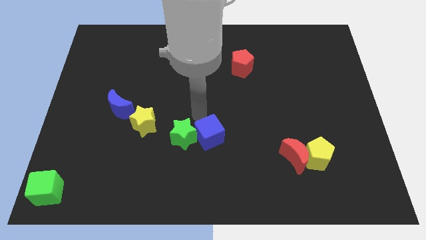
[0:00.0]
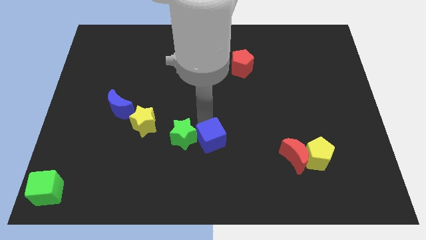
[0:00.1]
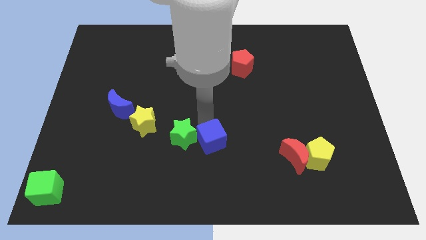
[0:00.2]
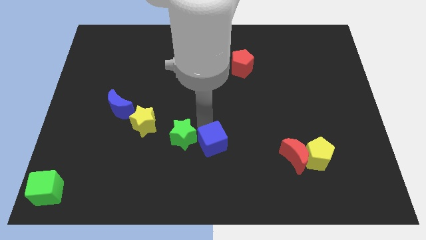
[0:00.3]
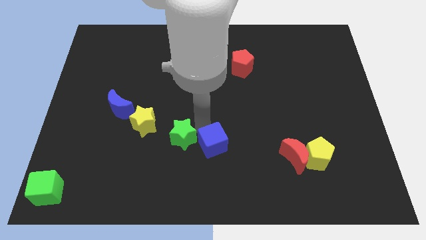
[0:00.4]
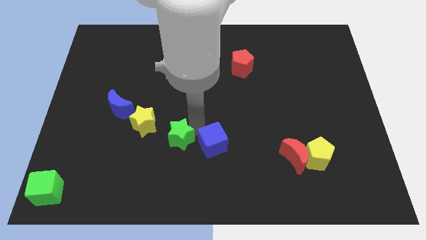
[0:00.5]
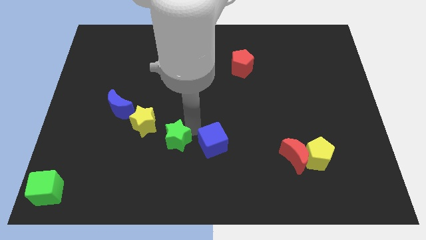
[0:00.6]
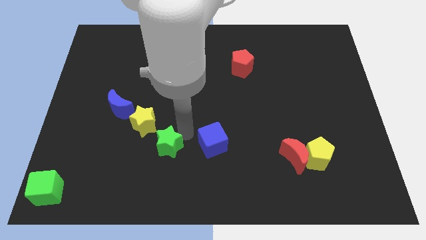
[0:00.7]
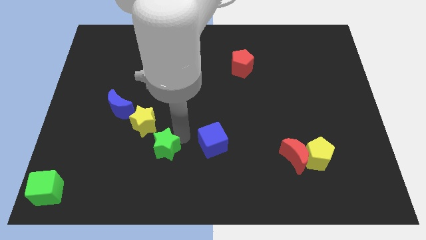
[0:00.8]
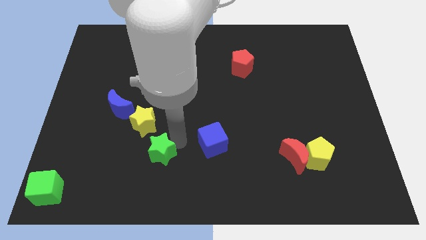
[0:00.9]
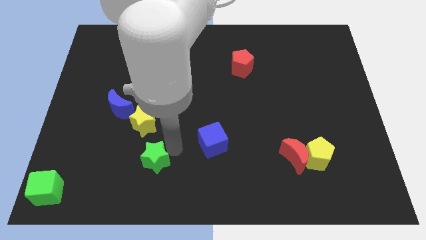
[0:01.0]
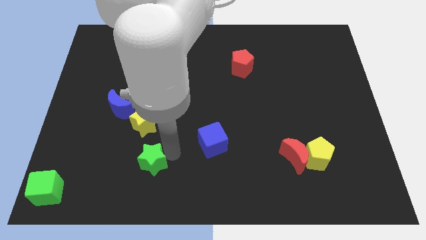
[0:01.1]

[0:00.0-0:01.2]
separate the green star from blue cube

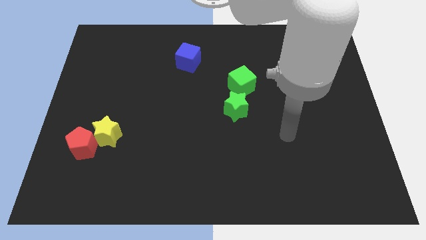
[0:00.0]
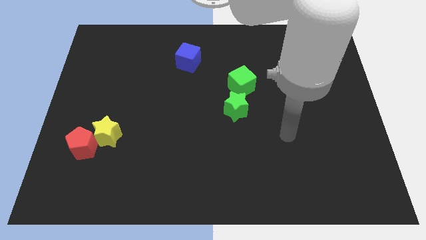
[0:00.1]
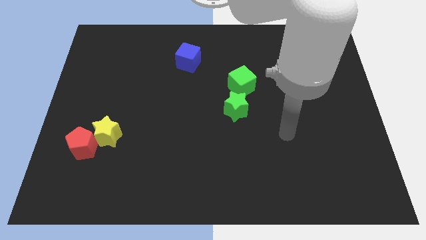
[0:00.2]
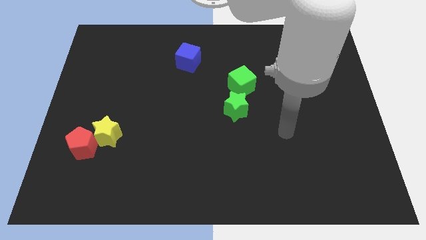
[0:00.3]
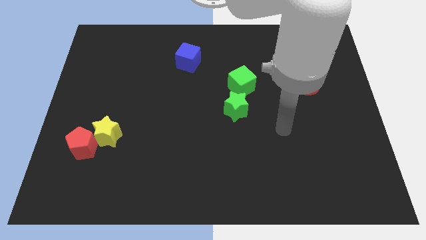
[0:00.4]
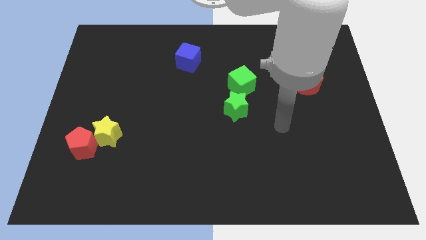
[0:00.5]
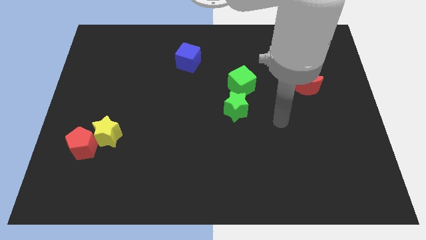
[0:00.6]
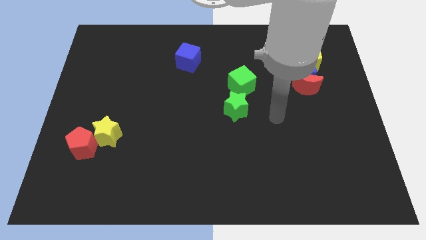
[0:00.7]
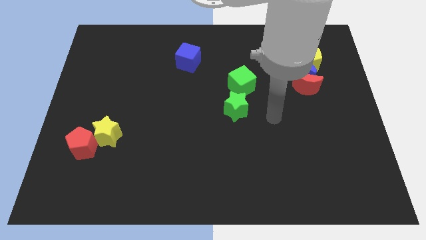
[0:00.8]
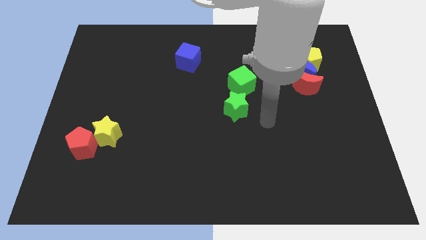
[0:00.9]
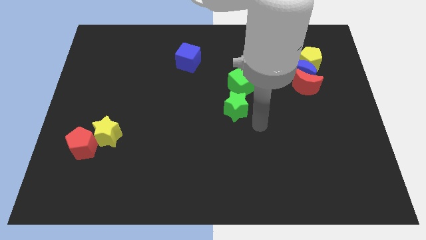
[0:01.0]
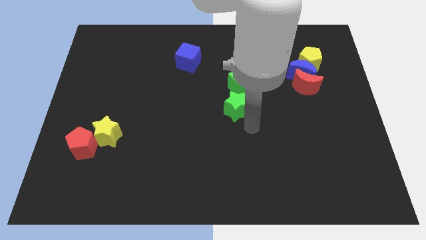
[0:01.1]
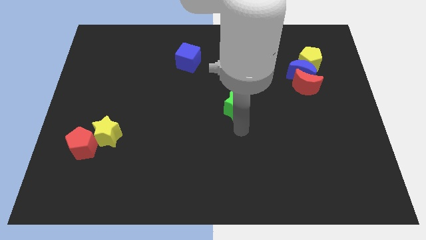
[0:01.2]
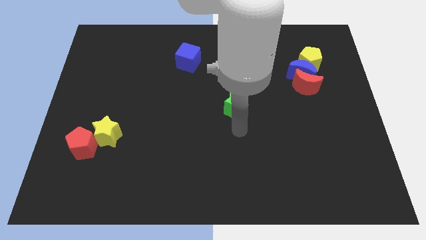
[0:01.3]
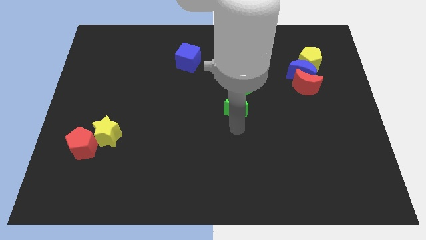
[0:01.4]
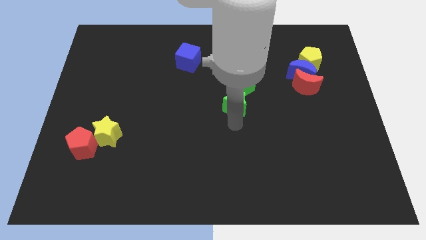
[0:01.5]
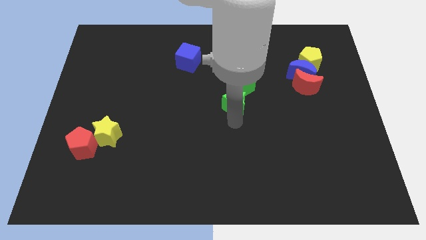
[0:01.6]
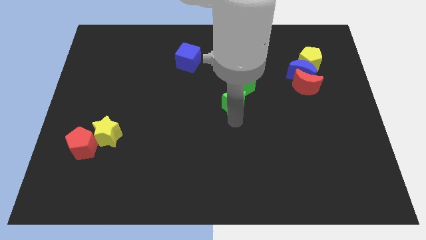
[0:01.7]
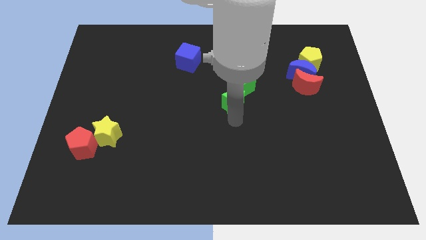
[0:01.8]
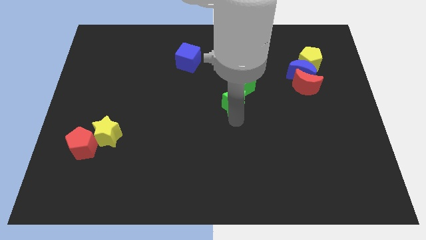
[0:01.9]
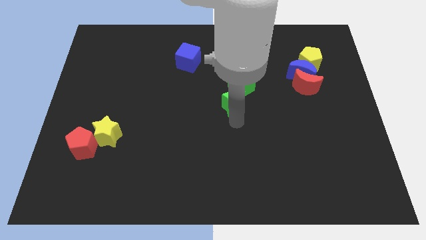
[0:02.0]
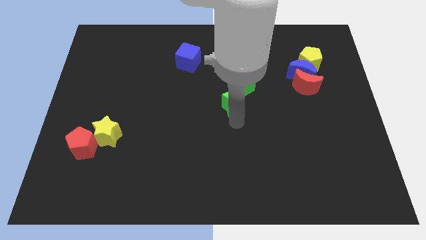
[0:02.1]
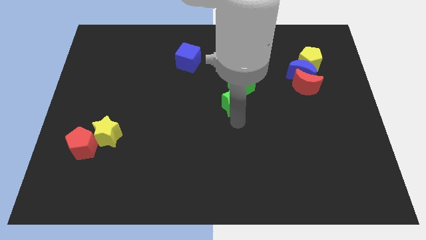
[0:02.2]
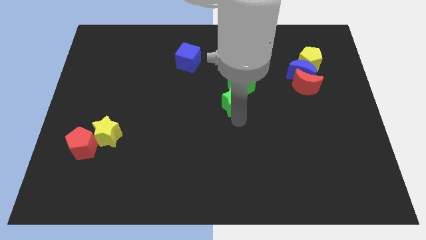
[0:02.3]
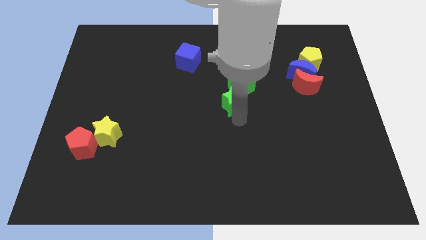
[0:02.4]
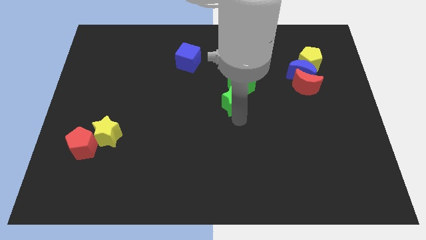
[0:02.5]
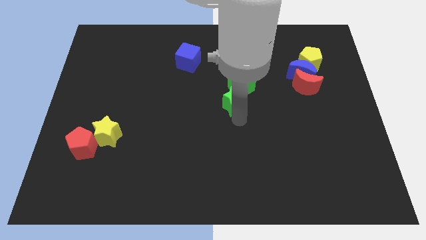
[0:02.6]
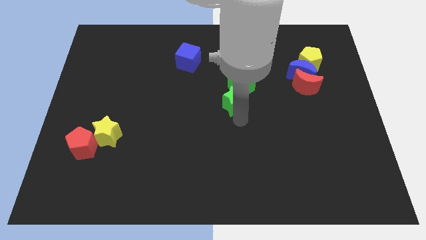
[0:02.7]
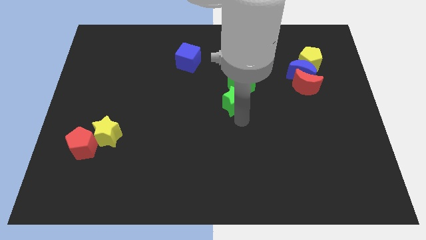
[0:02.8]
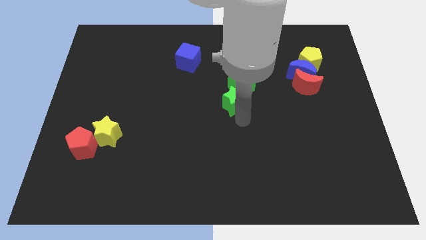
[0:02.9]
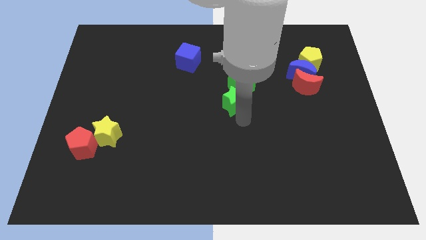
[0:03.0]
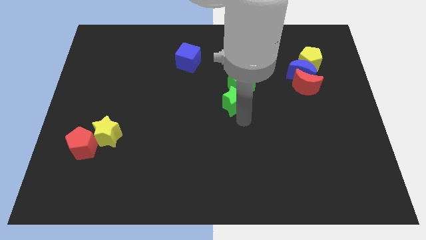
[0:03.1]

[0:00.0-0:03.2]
place your arm below the green star

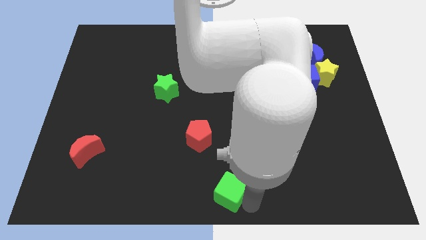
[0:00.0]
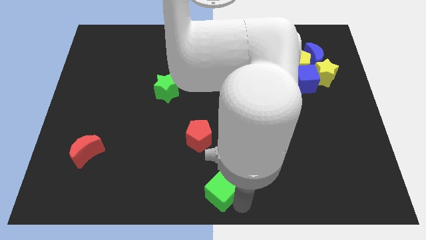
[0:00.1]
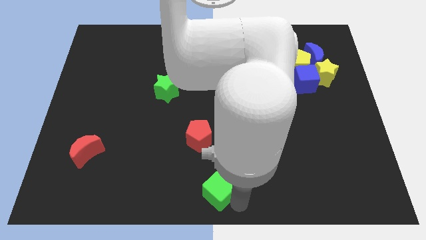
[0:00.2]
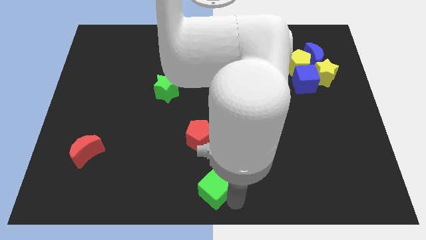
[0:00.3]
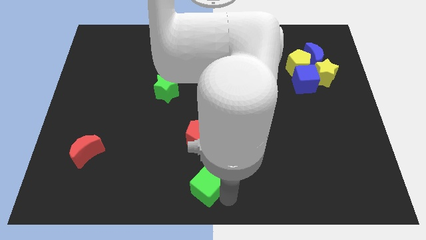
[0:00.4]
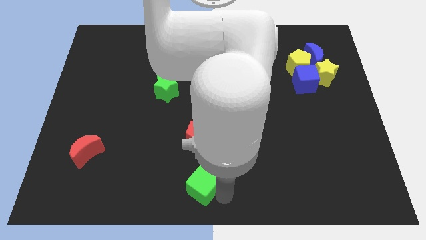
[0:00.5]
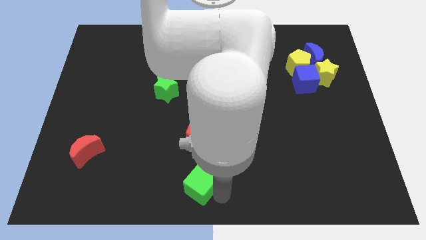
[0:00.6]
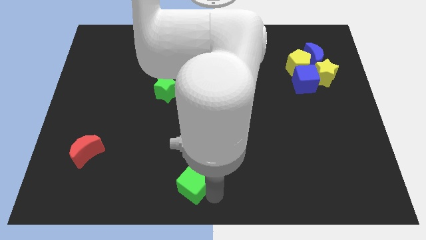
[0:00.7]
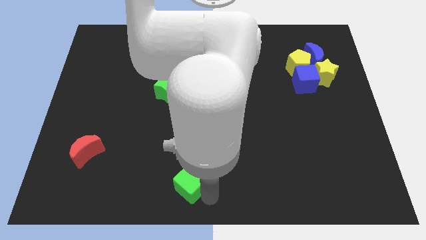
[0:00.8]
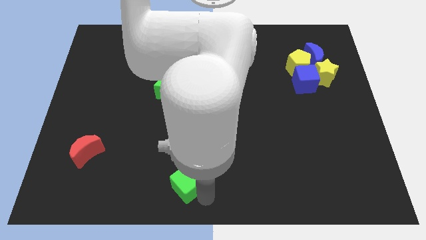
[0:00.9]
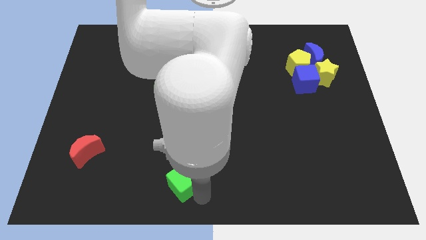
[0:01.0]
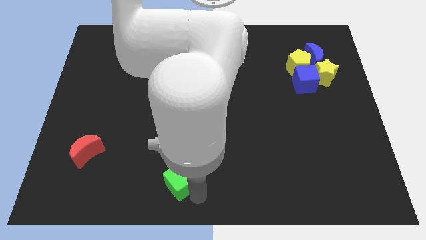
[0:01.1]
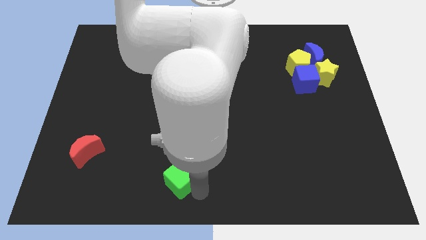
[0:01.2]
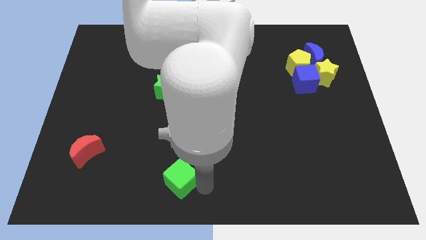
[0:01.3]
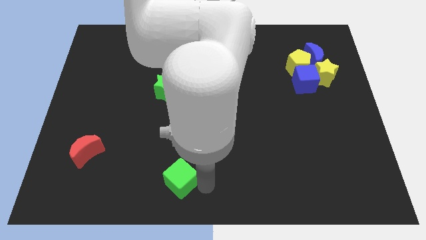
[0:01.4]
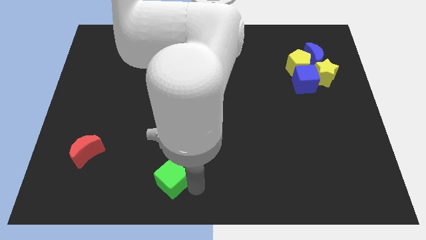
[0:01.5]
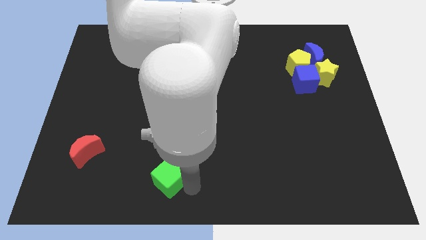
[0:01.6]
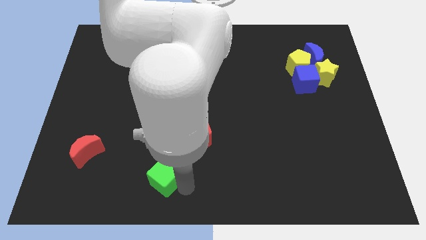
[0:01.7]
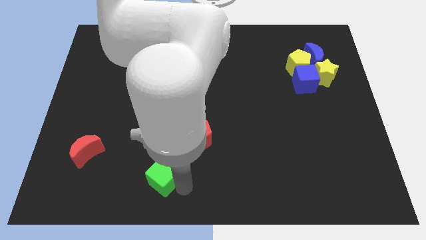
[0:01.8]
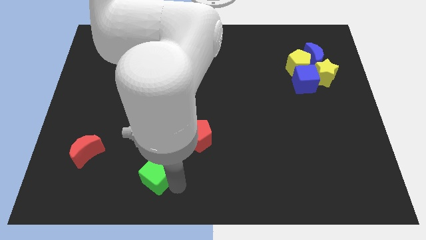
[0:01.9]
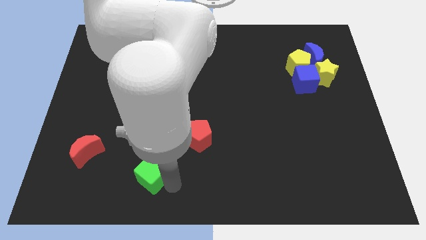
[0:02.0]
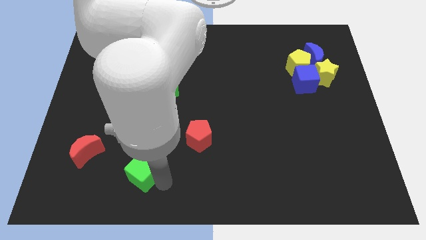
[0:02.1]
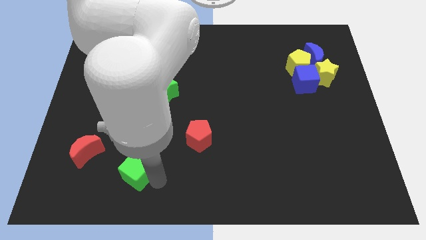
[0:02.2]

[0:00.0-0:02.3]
place the green cube towards the red crescent

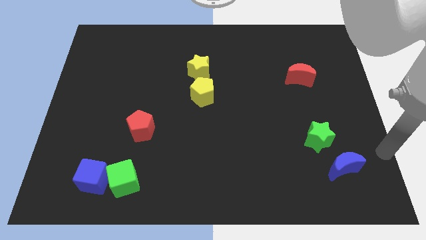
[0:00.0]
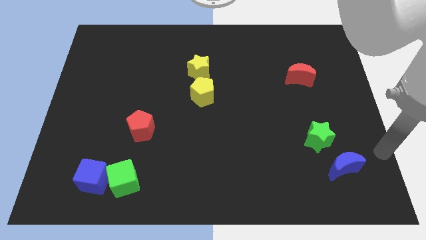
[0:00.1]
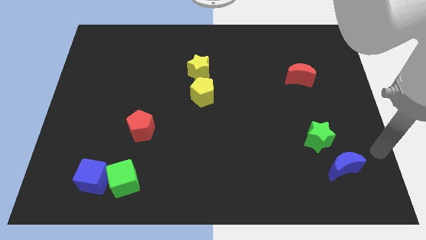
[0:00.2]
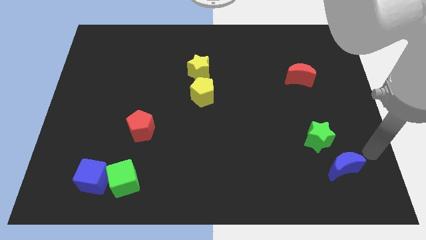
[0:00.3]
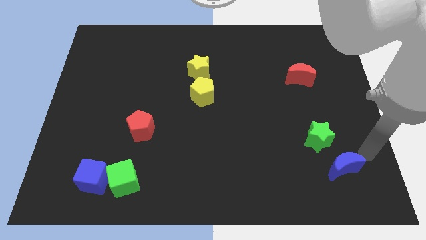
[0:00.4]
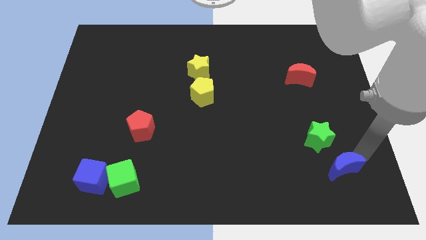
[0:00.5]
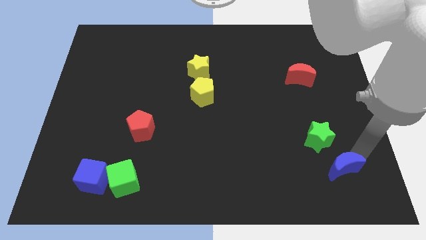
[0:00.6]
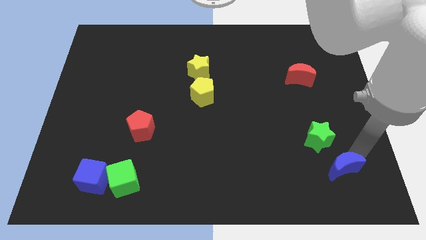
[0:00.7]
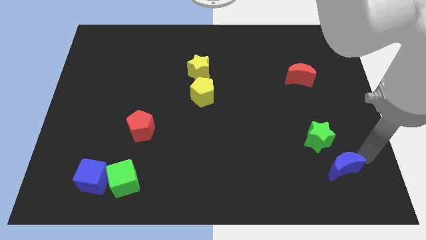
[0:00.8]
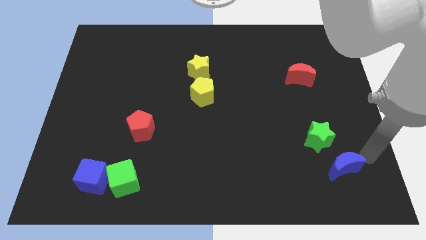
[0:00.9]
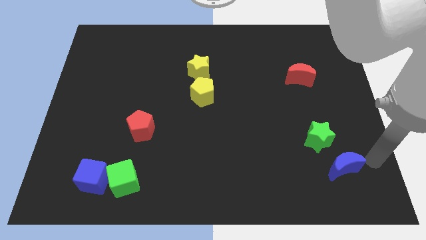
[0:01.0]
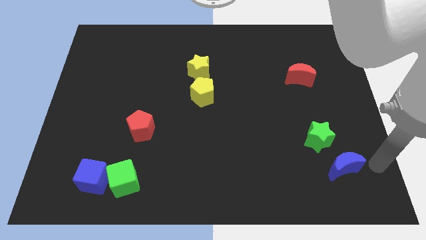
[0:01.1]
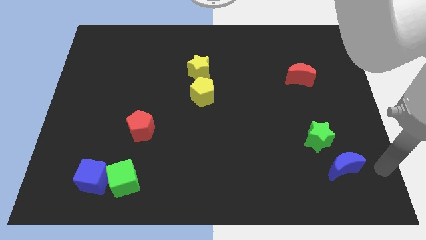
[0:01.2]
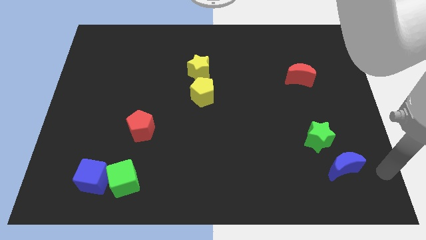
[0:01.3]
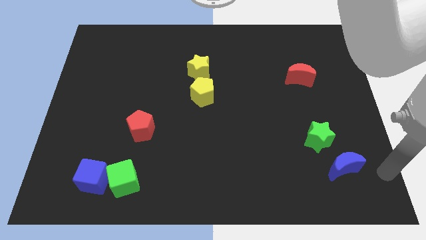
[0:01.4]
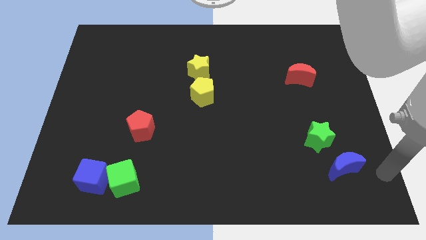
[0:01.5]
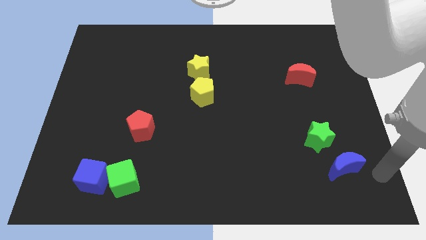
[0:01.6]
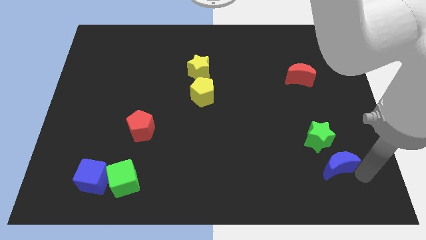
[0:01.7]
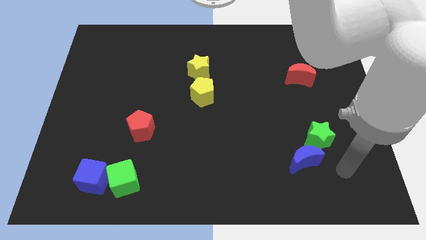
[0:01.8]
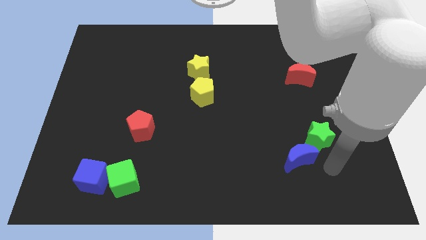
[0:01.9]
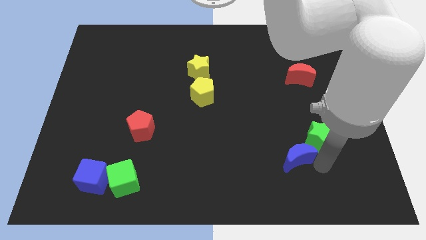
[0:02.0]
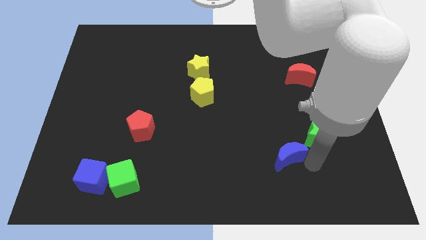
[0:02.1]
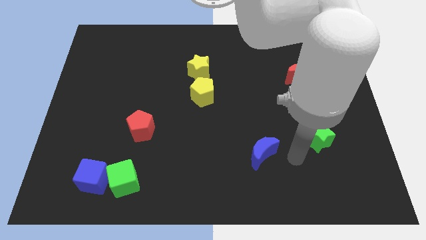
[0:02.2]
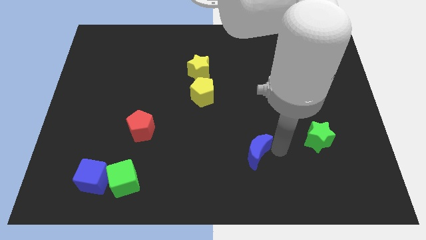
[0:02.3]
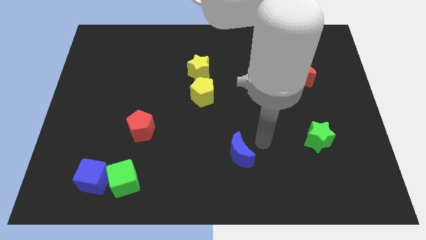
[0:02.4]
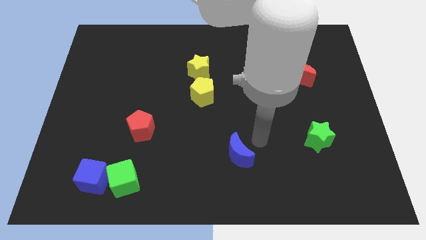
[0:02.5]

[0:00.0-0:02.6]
move the blue moon towards the left side of the board
